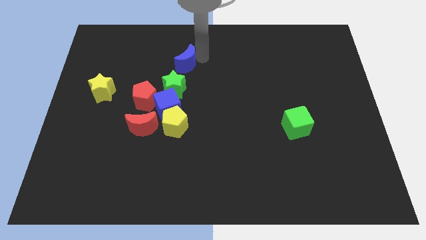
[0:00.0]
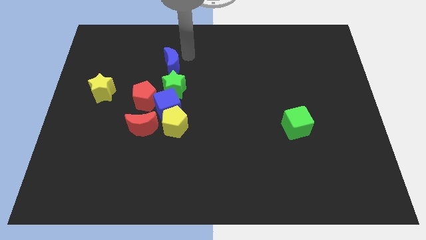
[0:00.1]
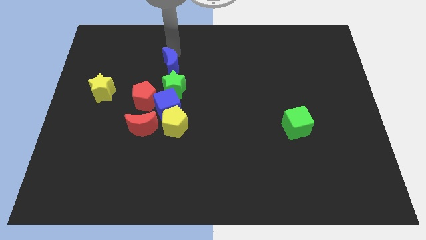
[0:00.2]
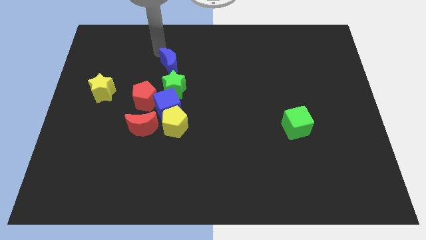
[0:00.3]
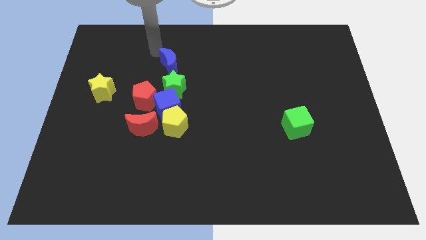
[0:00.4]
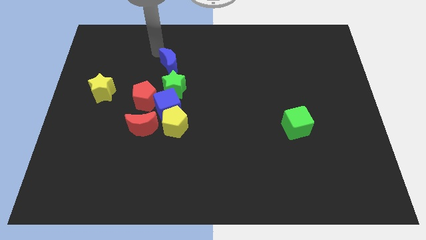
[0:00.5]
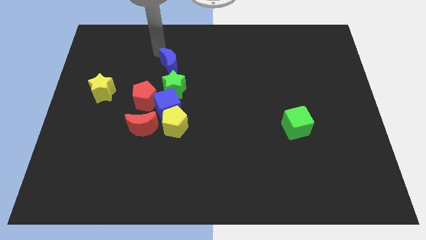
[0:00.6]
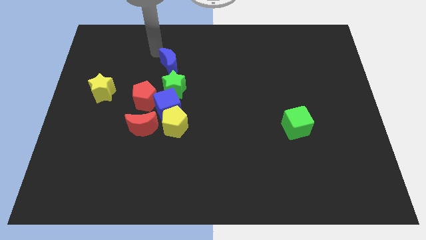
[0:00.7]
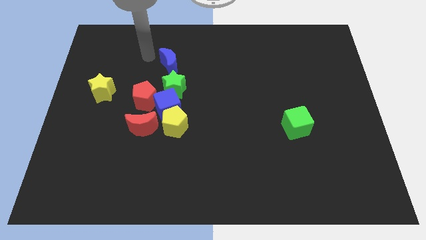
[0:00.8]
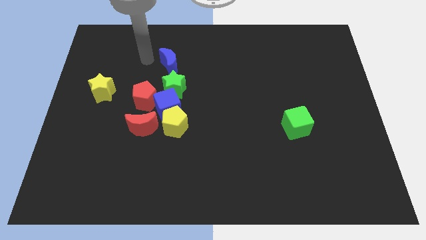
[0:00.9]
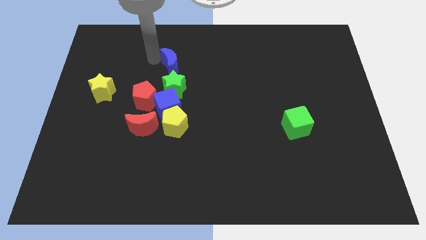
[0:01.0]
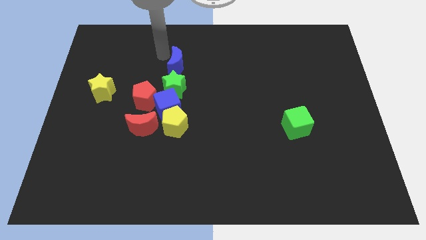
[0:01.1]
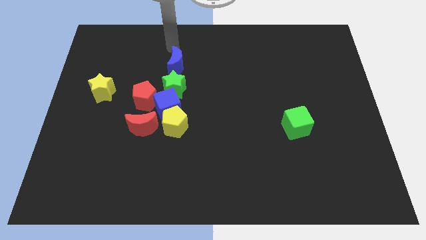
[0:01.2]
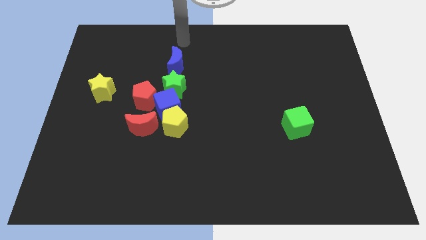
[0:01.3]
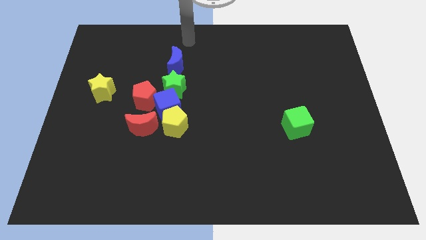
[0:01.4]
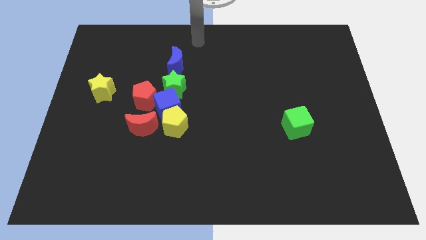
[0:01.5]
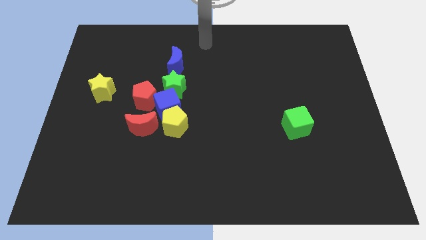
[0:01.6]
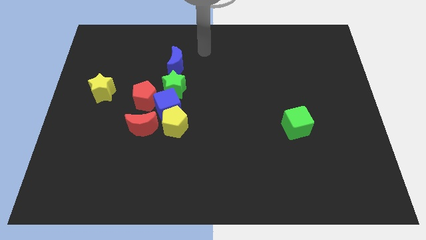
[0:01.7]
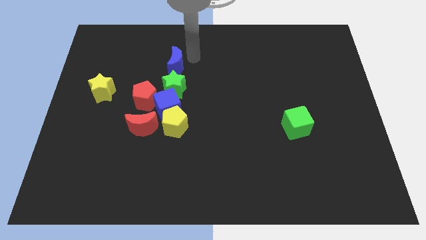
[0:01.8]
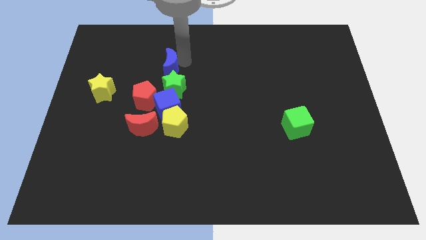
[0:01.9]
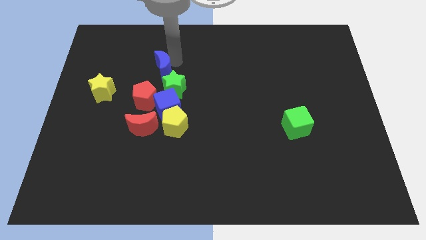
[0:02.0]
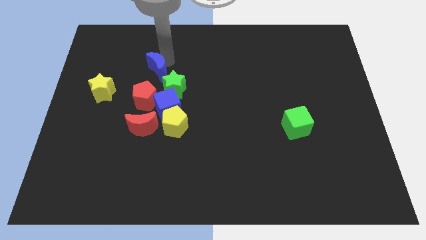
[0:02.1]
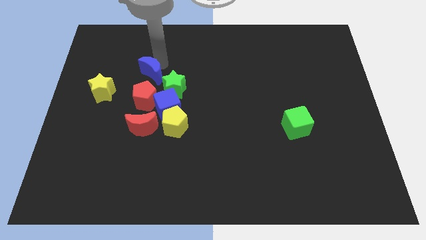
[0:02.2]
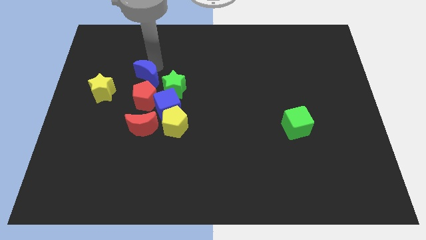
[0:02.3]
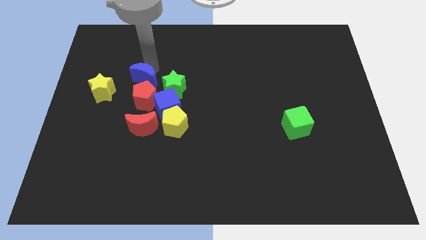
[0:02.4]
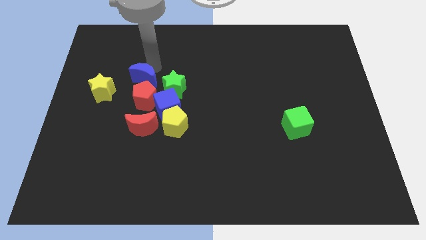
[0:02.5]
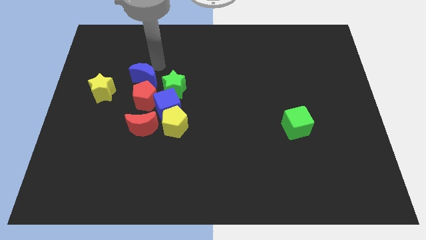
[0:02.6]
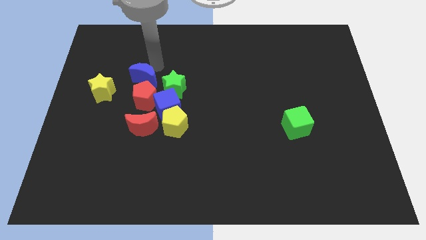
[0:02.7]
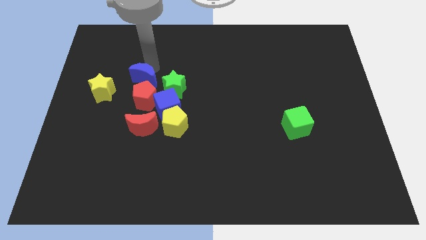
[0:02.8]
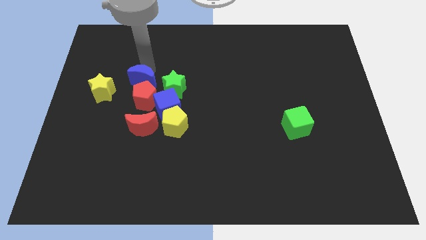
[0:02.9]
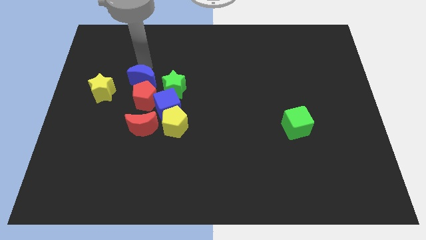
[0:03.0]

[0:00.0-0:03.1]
place blue crescent above red pentagon

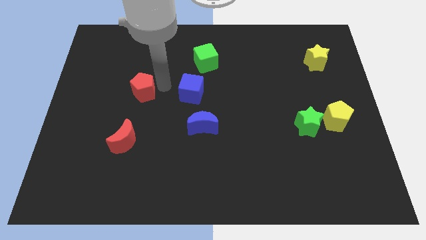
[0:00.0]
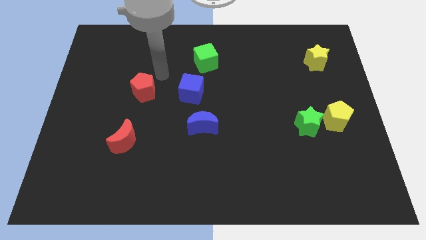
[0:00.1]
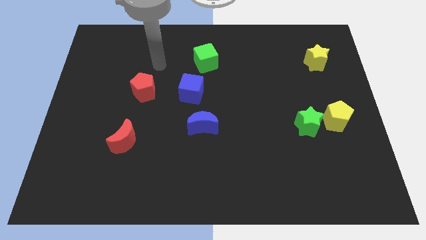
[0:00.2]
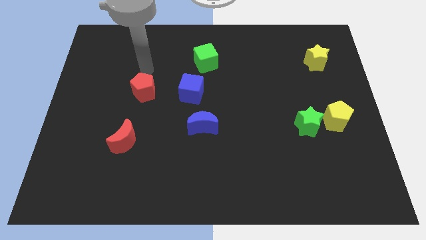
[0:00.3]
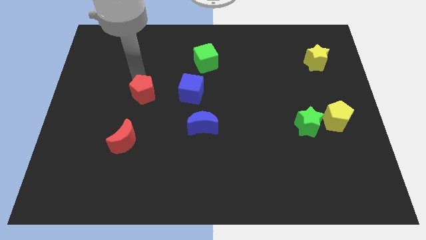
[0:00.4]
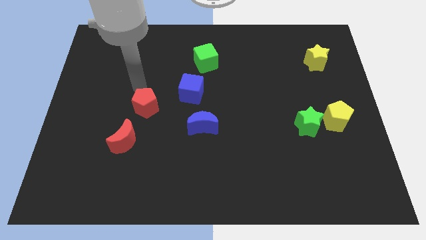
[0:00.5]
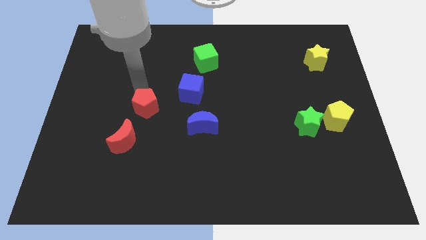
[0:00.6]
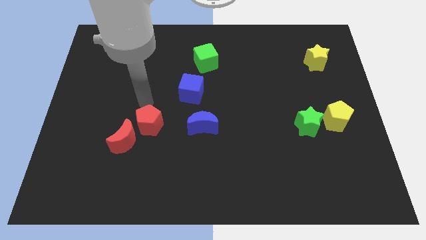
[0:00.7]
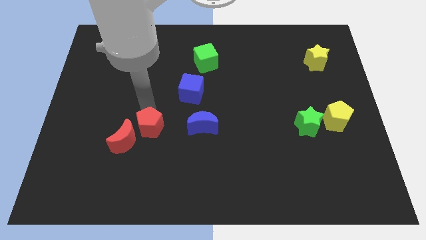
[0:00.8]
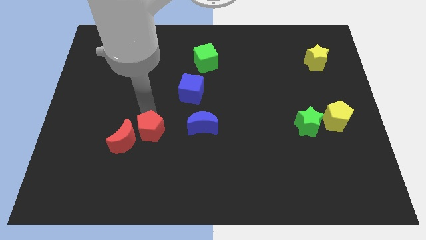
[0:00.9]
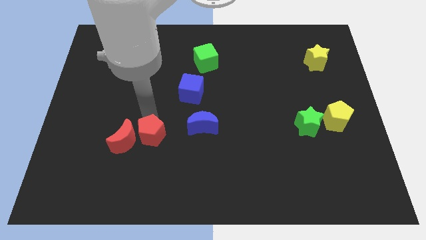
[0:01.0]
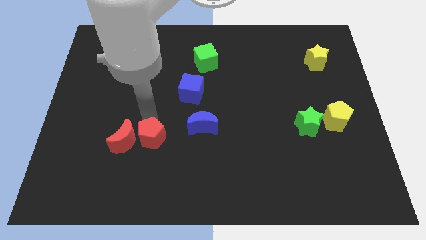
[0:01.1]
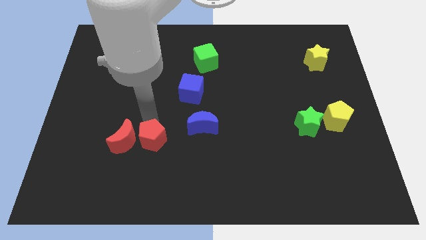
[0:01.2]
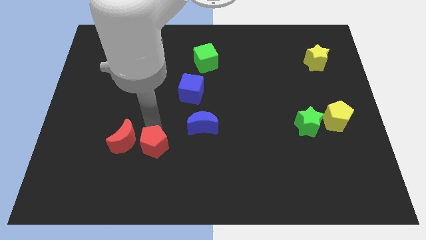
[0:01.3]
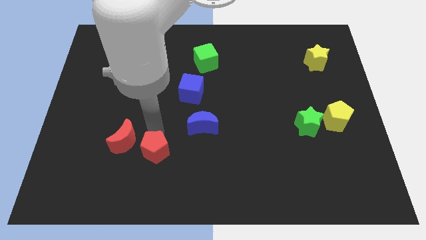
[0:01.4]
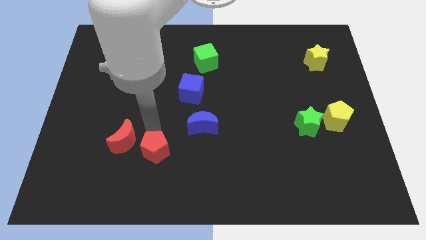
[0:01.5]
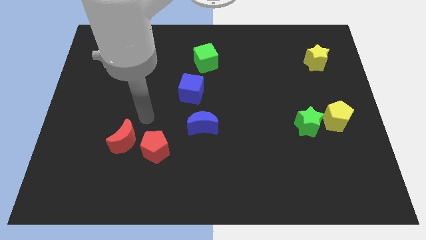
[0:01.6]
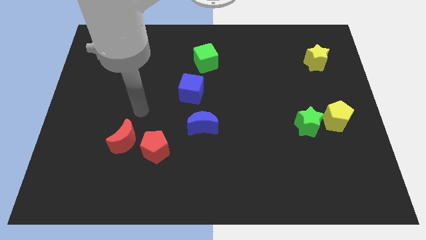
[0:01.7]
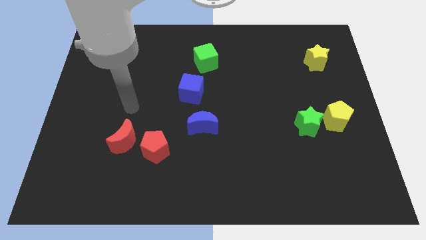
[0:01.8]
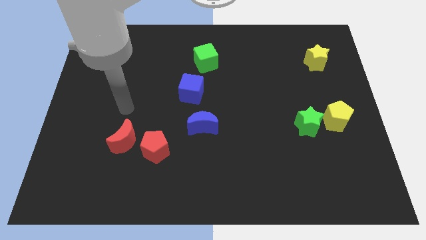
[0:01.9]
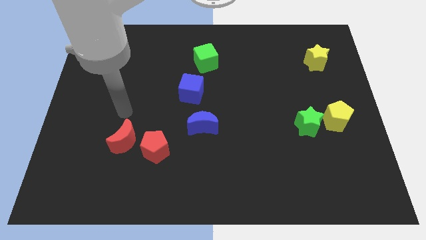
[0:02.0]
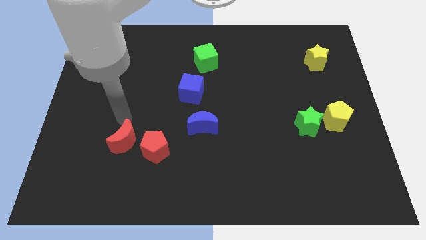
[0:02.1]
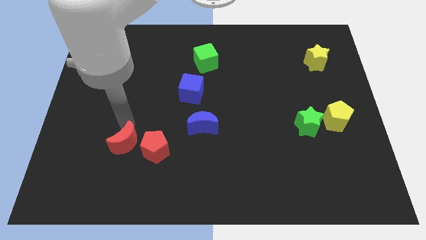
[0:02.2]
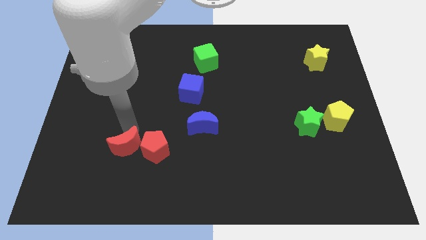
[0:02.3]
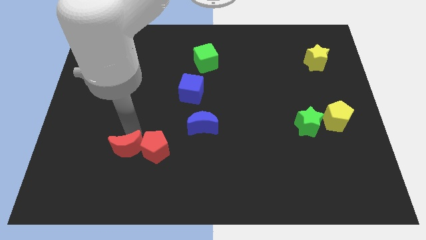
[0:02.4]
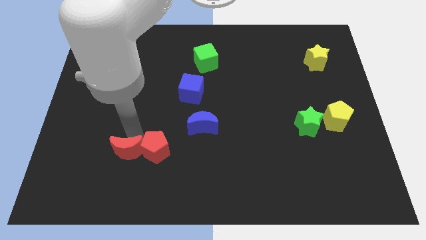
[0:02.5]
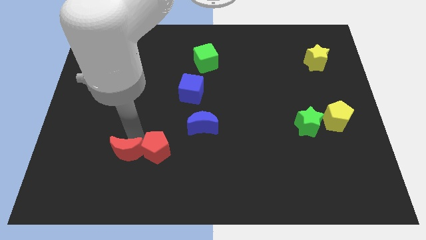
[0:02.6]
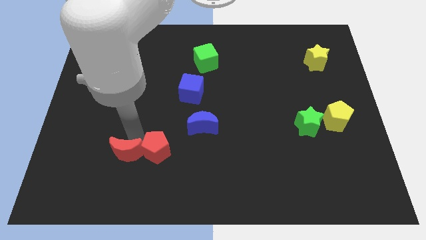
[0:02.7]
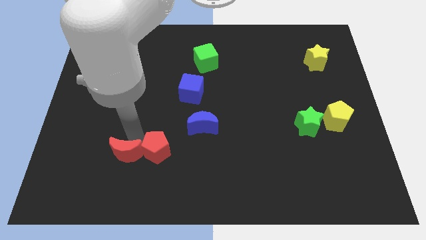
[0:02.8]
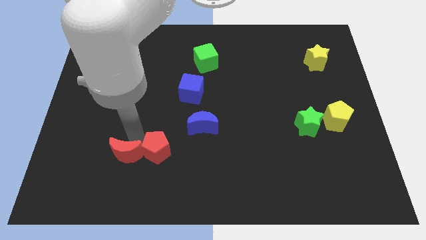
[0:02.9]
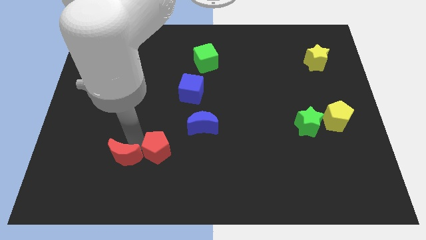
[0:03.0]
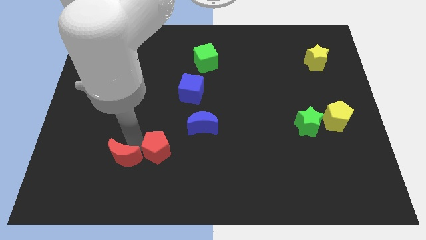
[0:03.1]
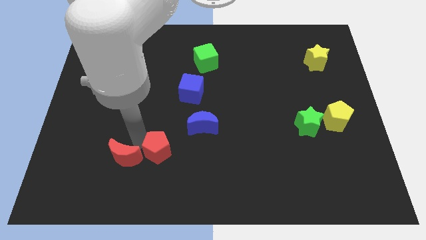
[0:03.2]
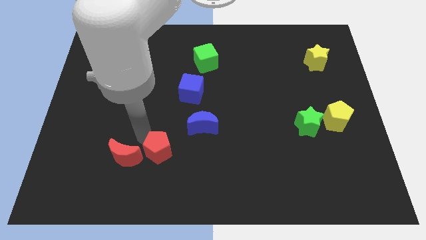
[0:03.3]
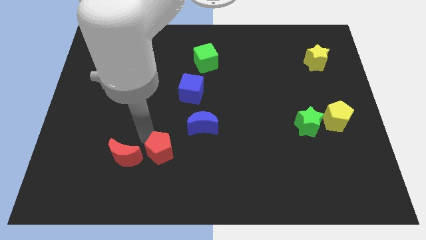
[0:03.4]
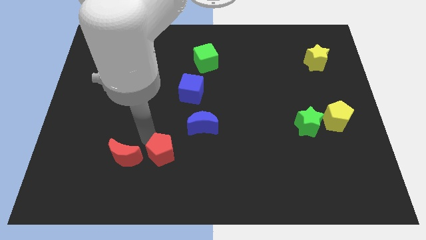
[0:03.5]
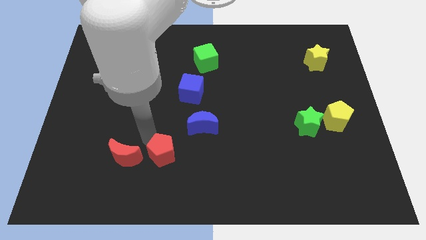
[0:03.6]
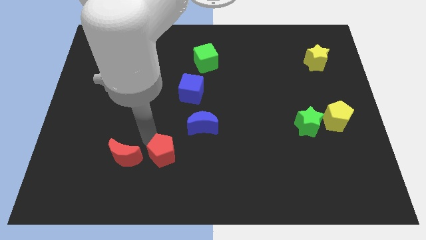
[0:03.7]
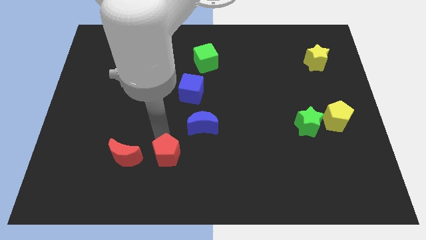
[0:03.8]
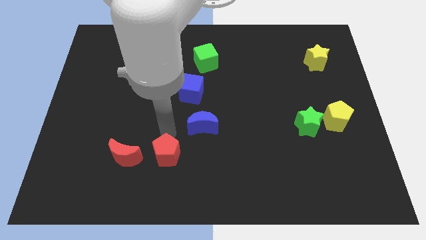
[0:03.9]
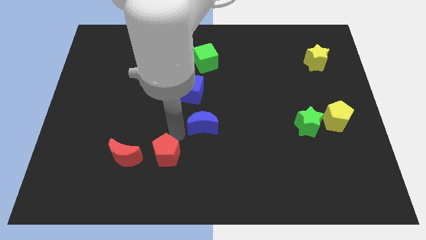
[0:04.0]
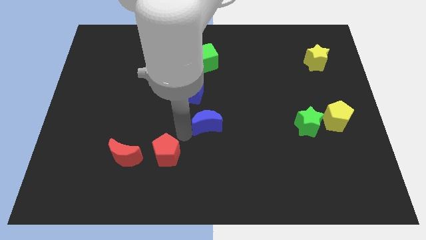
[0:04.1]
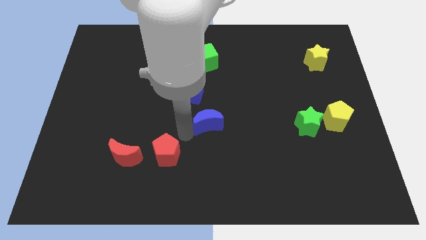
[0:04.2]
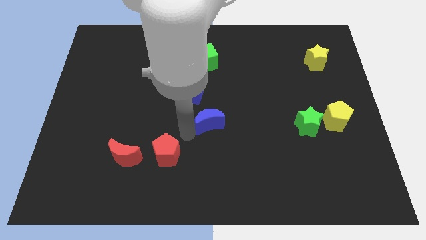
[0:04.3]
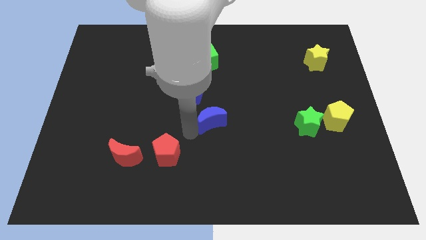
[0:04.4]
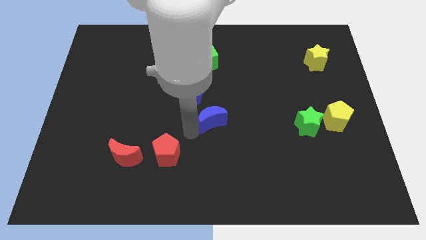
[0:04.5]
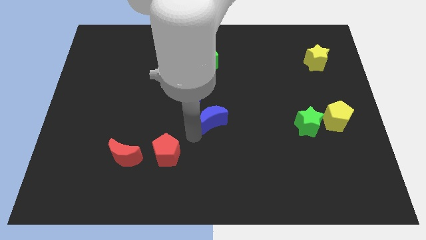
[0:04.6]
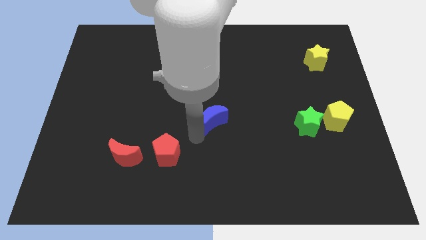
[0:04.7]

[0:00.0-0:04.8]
place the red blocks adjacent to each other

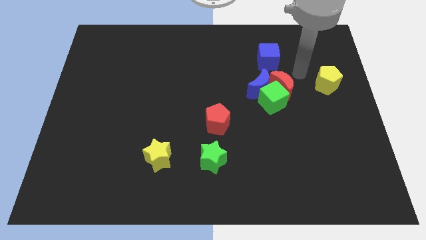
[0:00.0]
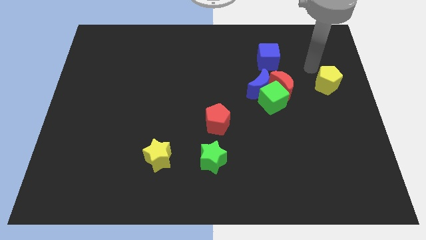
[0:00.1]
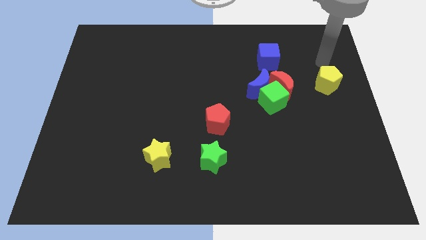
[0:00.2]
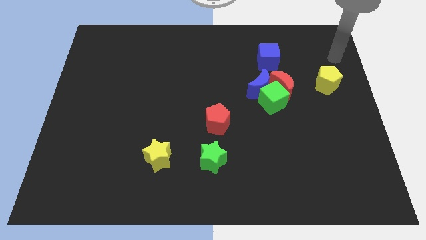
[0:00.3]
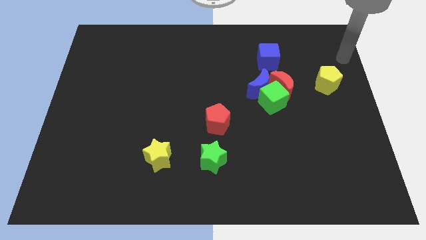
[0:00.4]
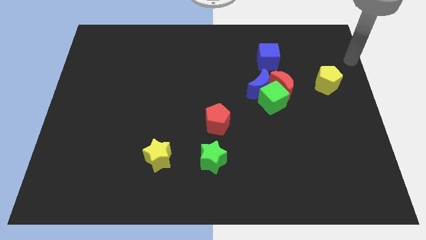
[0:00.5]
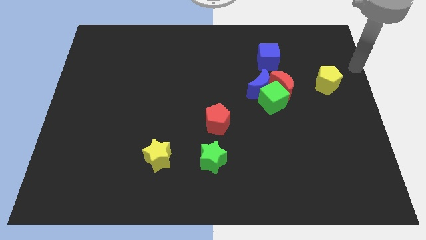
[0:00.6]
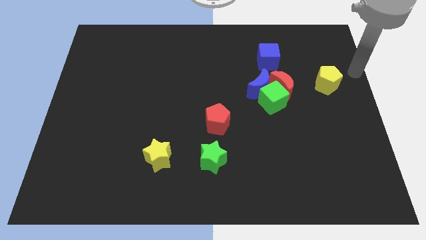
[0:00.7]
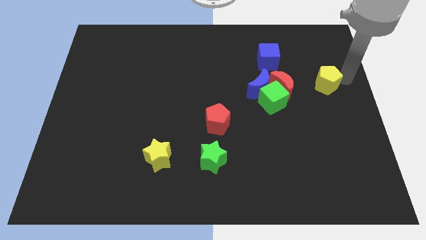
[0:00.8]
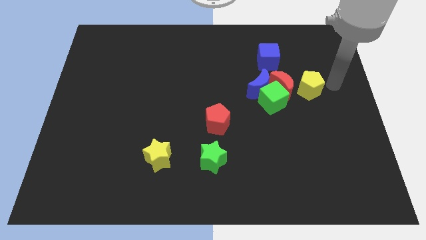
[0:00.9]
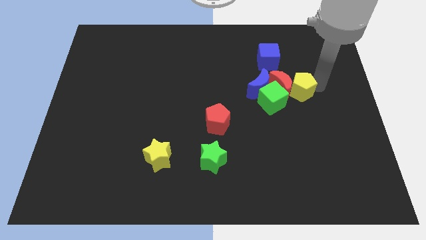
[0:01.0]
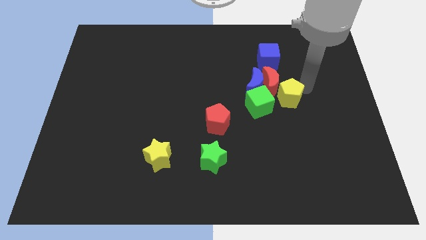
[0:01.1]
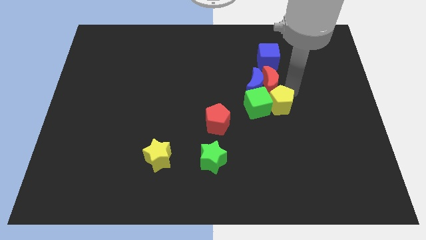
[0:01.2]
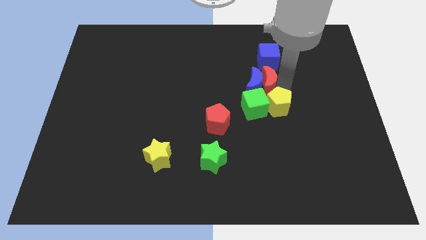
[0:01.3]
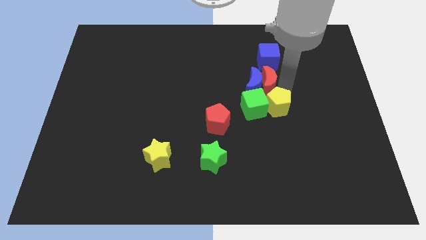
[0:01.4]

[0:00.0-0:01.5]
slide the yellow pentagon vertically below the blue cube
